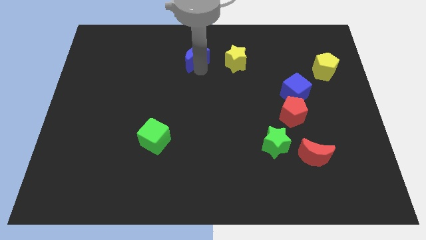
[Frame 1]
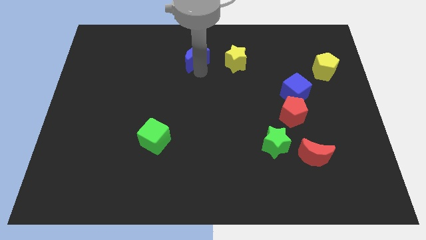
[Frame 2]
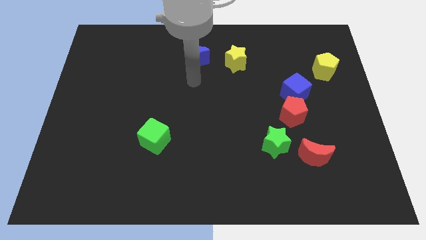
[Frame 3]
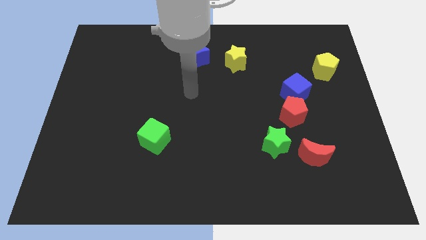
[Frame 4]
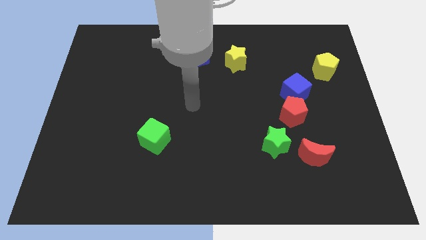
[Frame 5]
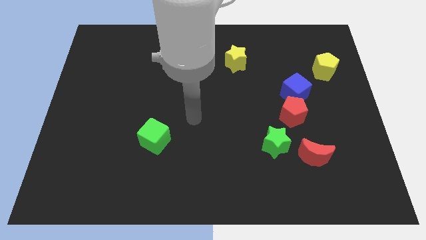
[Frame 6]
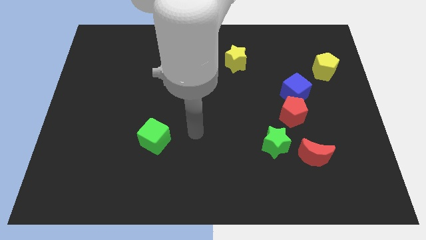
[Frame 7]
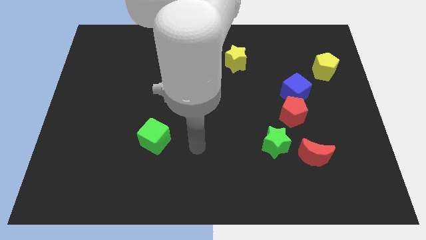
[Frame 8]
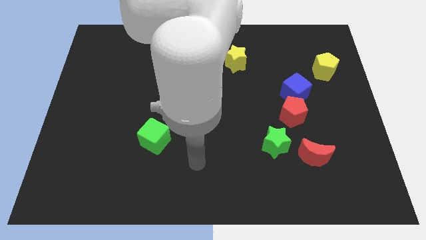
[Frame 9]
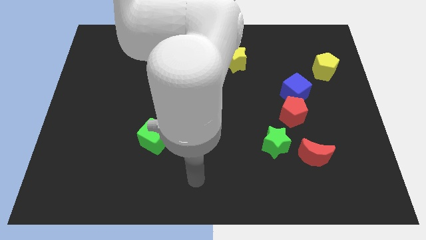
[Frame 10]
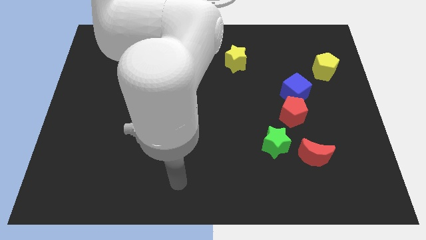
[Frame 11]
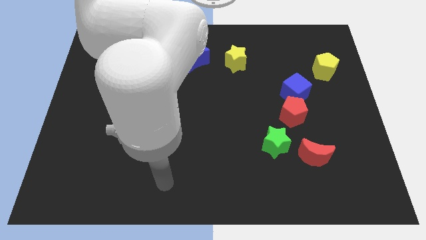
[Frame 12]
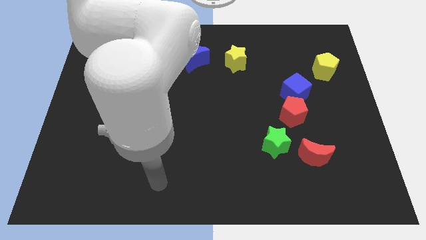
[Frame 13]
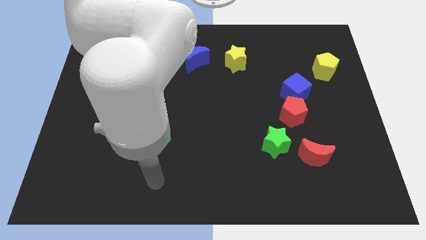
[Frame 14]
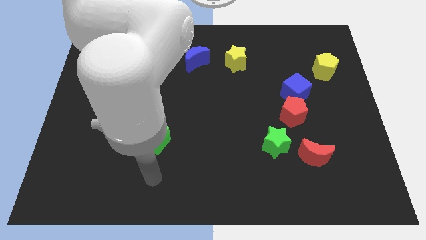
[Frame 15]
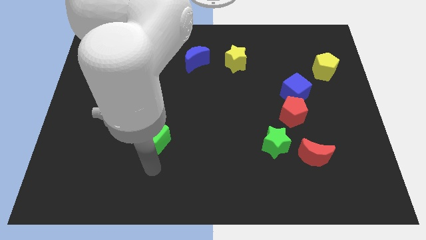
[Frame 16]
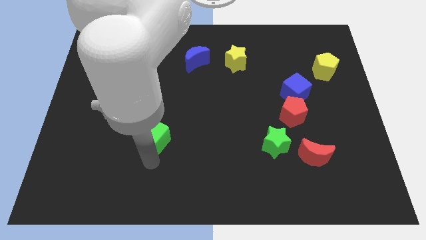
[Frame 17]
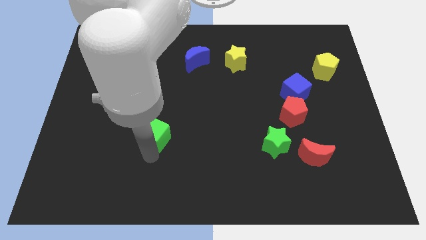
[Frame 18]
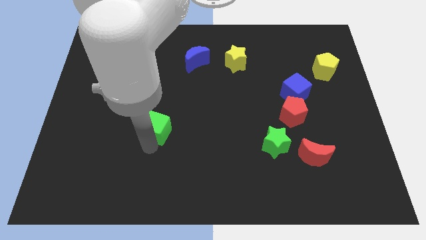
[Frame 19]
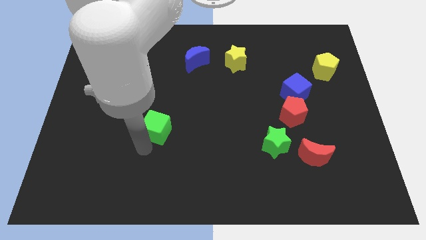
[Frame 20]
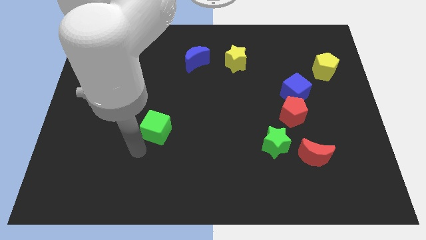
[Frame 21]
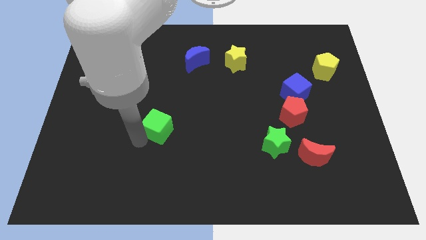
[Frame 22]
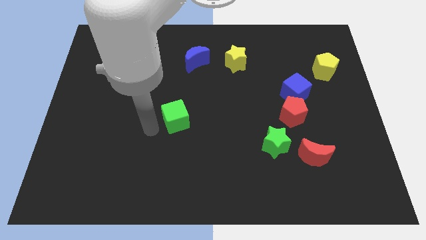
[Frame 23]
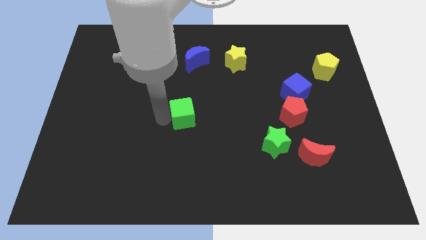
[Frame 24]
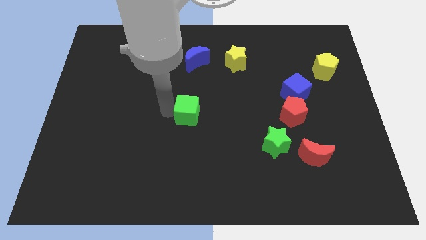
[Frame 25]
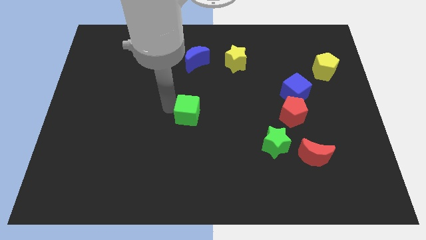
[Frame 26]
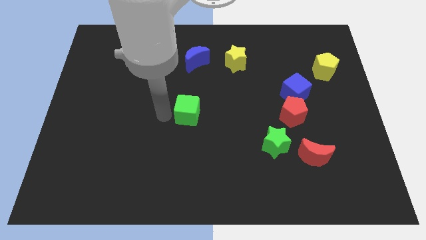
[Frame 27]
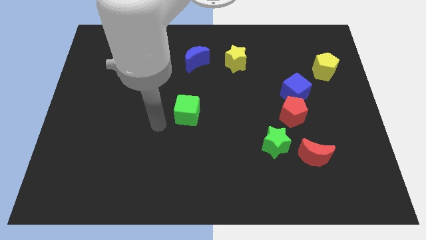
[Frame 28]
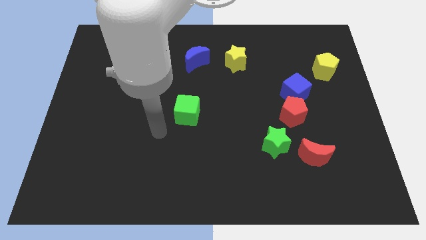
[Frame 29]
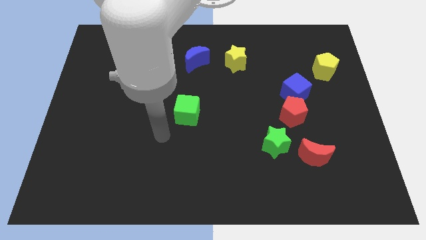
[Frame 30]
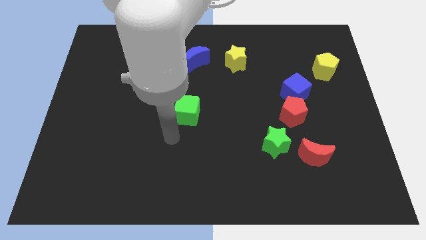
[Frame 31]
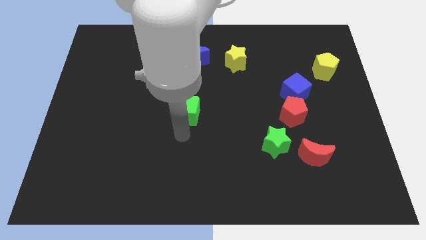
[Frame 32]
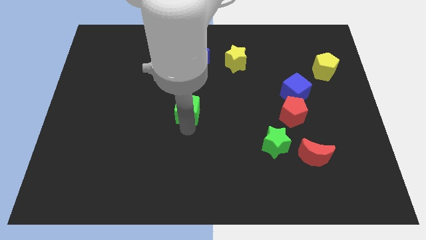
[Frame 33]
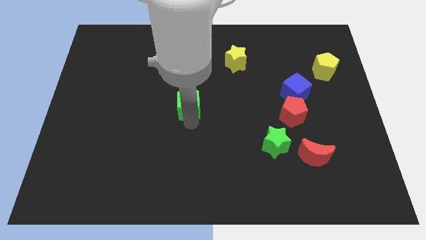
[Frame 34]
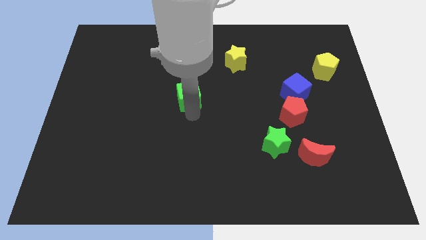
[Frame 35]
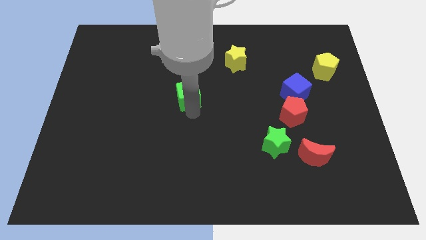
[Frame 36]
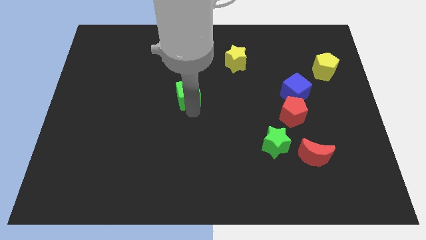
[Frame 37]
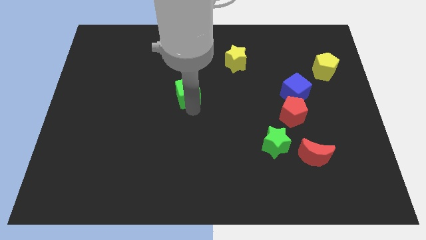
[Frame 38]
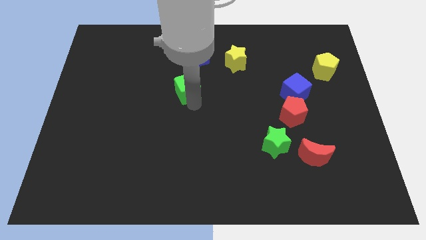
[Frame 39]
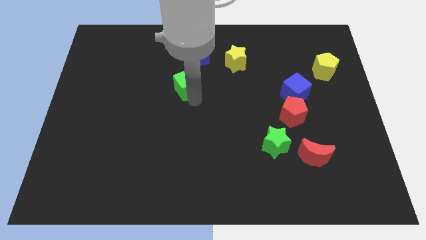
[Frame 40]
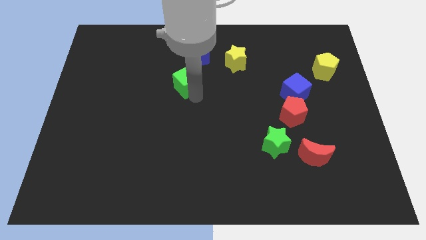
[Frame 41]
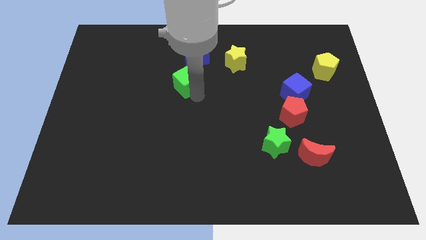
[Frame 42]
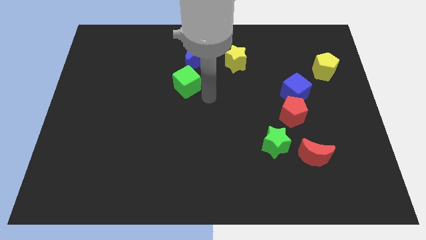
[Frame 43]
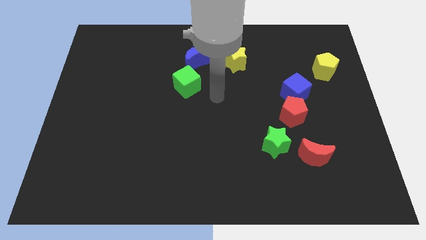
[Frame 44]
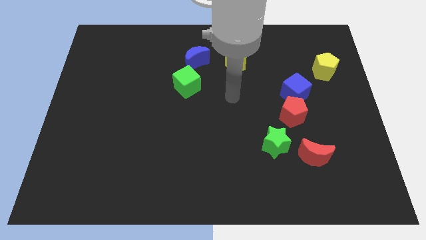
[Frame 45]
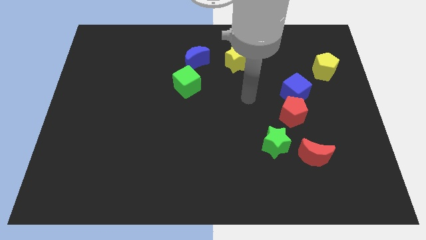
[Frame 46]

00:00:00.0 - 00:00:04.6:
push the green cube towards the blue crescent

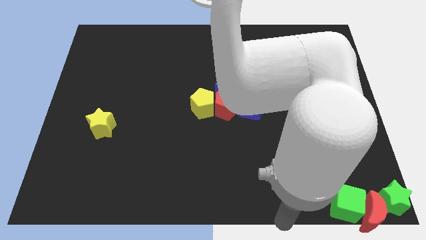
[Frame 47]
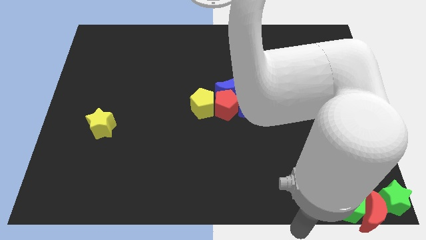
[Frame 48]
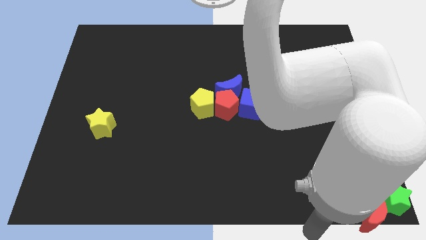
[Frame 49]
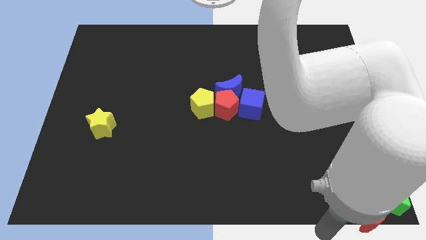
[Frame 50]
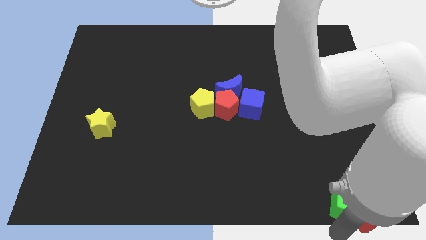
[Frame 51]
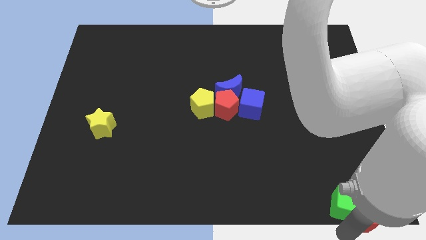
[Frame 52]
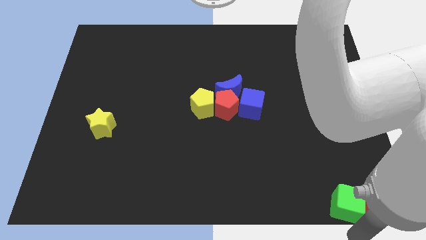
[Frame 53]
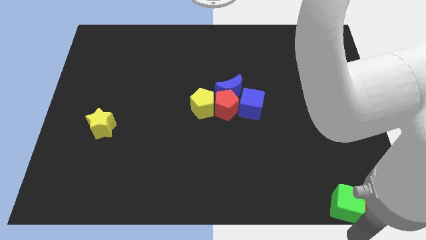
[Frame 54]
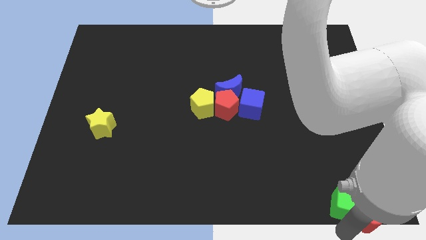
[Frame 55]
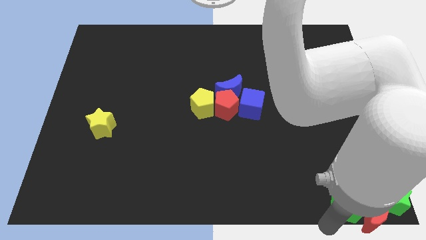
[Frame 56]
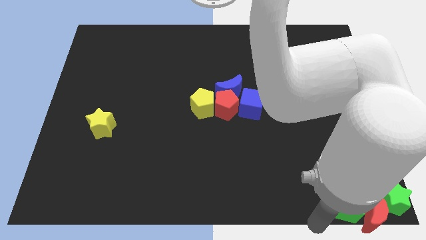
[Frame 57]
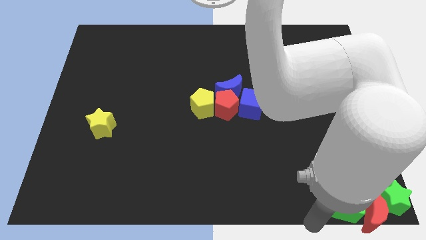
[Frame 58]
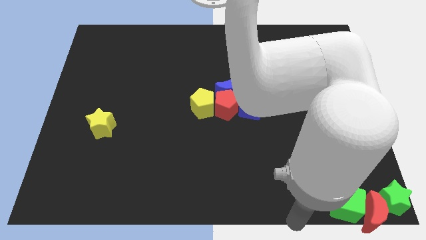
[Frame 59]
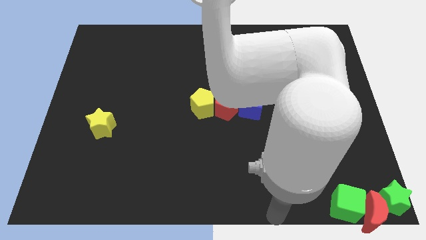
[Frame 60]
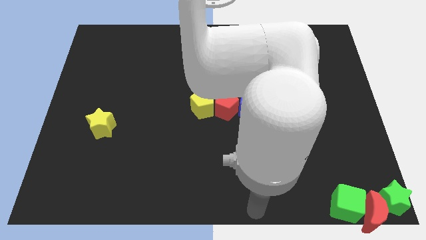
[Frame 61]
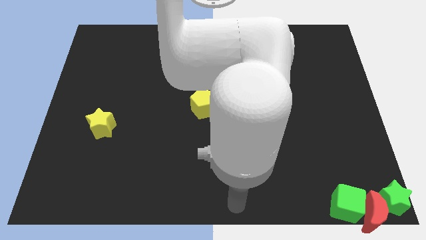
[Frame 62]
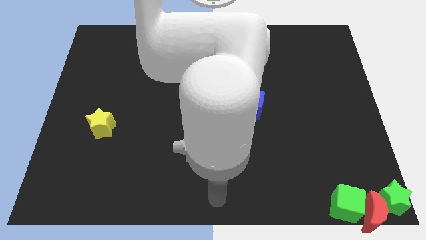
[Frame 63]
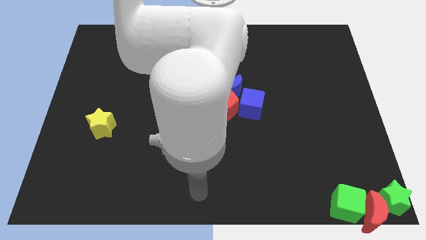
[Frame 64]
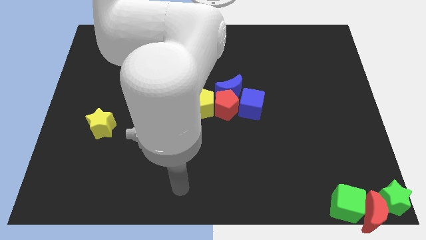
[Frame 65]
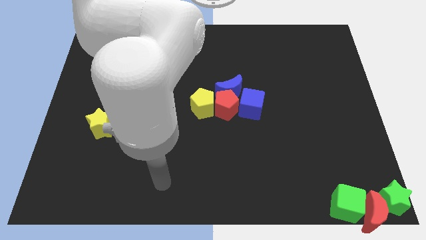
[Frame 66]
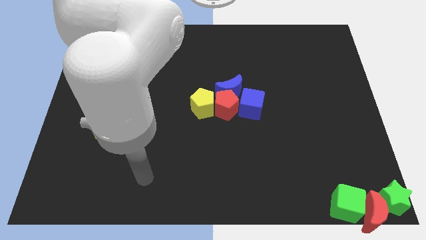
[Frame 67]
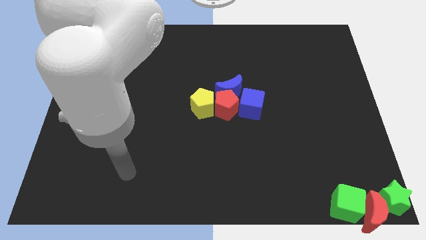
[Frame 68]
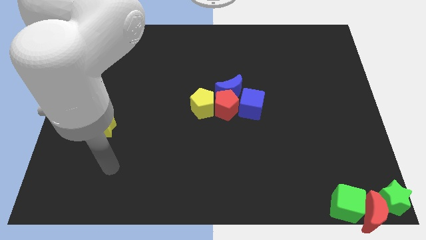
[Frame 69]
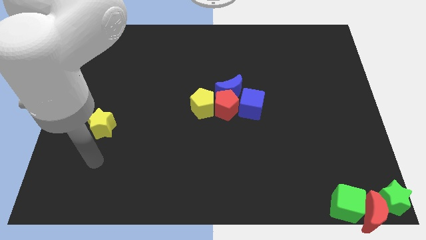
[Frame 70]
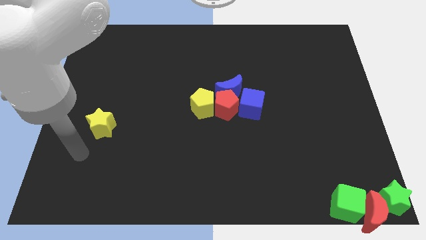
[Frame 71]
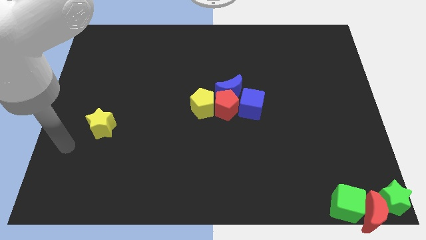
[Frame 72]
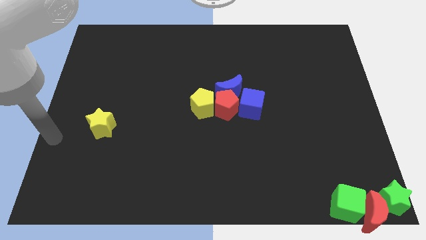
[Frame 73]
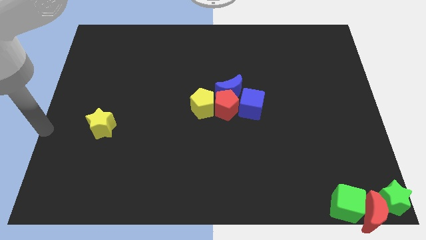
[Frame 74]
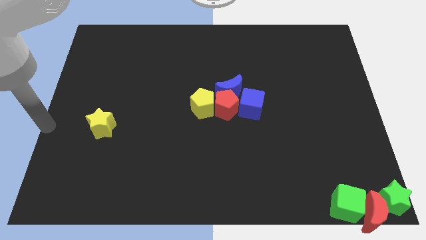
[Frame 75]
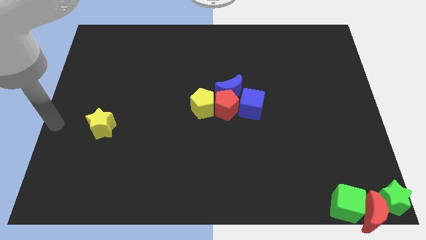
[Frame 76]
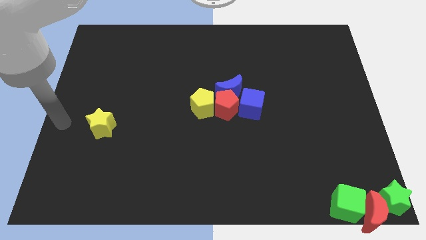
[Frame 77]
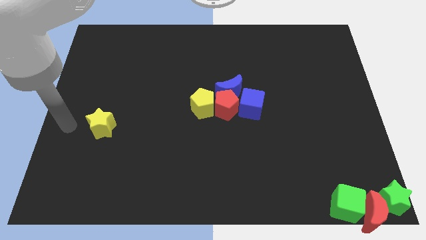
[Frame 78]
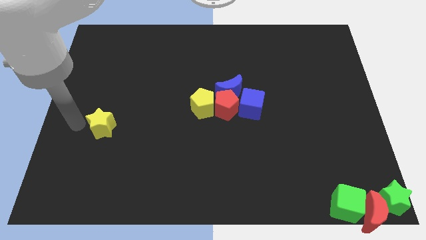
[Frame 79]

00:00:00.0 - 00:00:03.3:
move the arm near to the yellow star

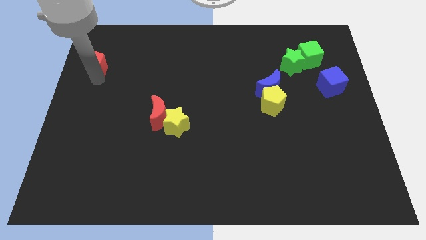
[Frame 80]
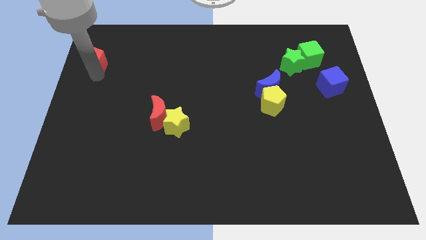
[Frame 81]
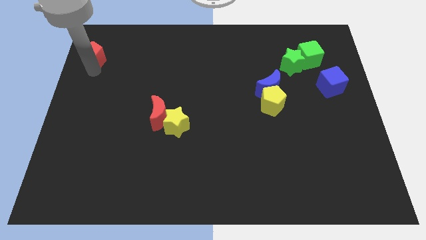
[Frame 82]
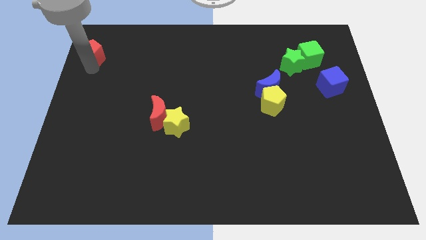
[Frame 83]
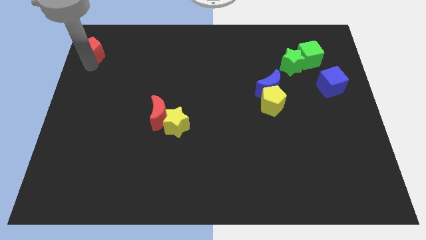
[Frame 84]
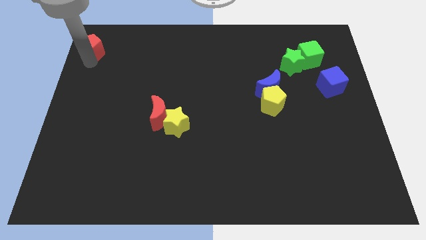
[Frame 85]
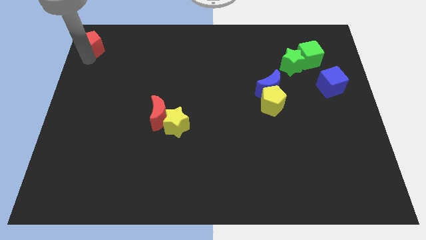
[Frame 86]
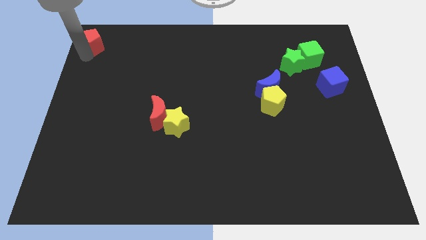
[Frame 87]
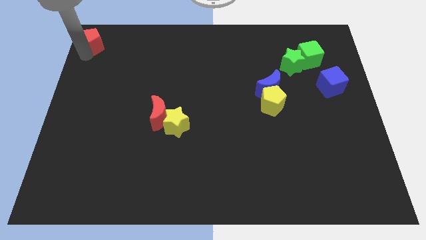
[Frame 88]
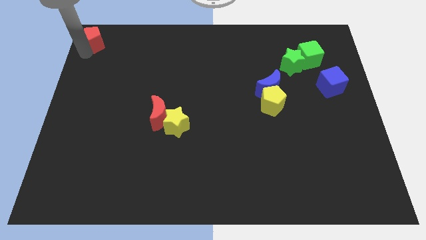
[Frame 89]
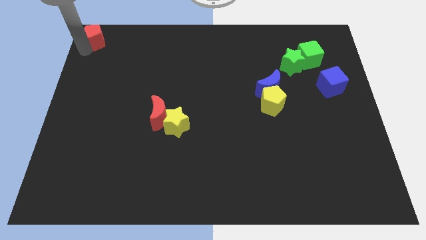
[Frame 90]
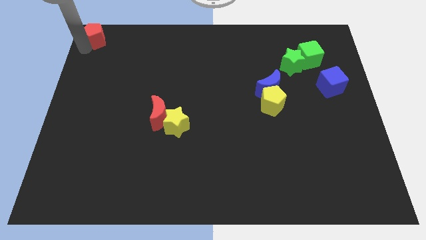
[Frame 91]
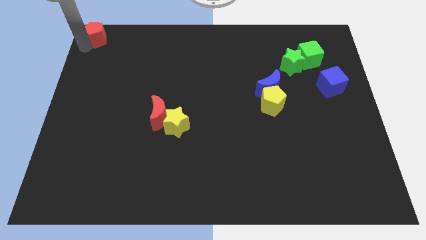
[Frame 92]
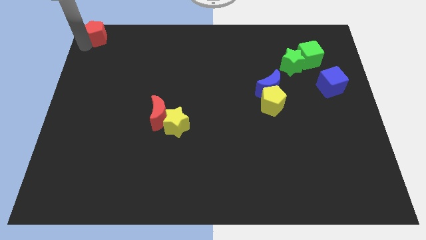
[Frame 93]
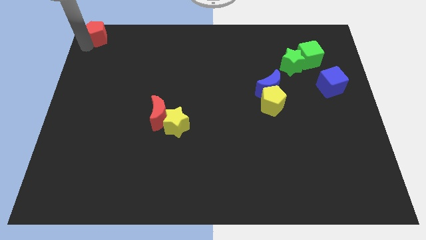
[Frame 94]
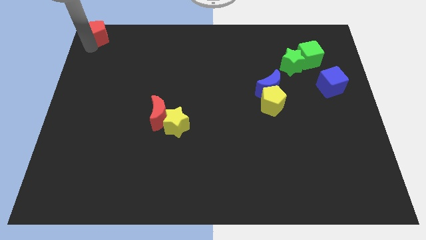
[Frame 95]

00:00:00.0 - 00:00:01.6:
move the red pentagon to the top left corner
